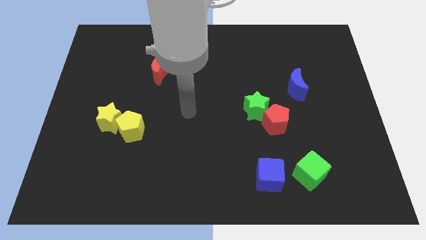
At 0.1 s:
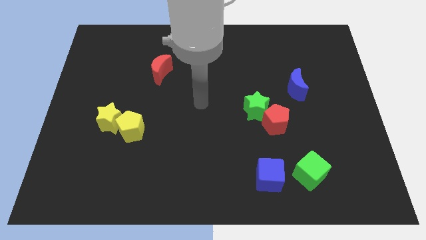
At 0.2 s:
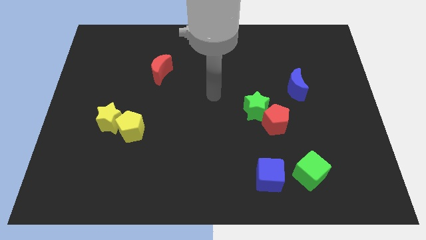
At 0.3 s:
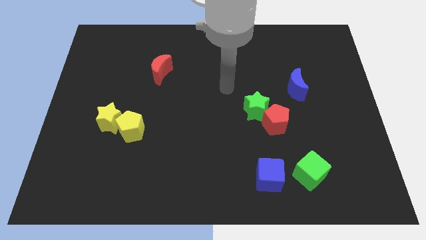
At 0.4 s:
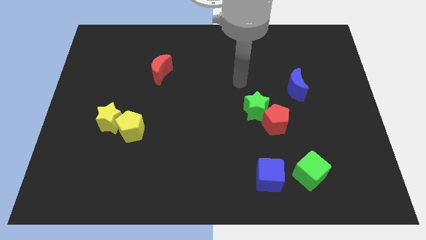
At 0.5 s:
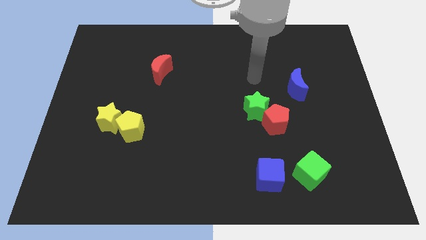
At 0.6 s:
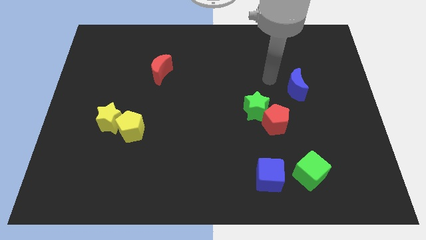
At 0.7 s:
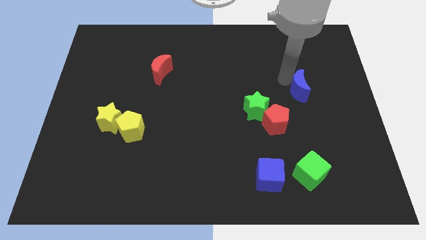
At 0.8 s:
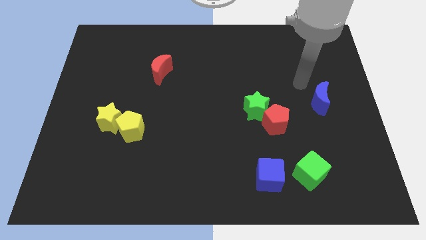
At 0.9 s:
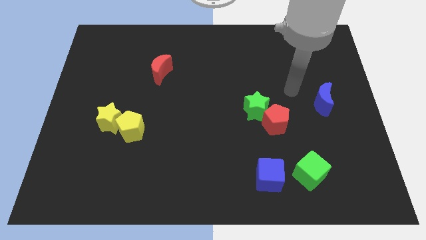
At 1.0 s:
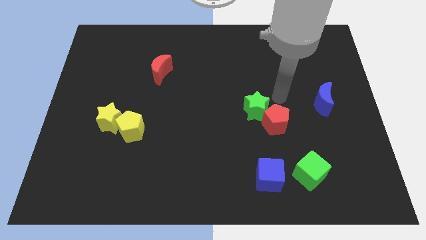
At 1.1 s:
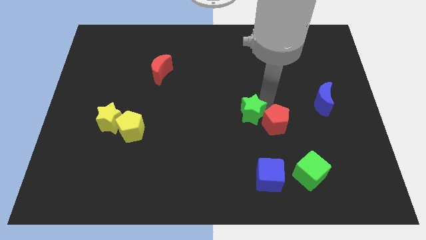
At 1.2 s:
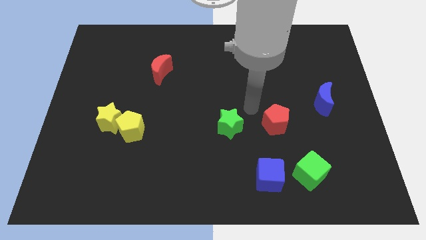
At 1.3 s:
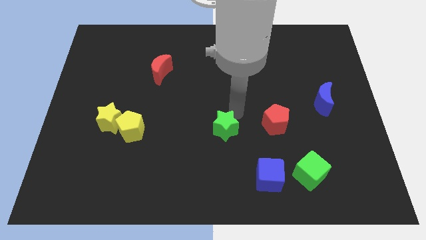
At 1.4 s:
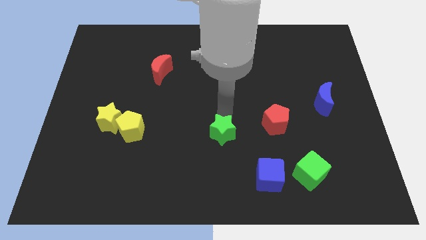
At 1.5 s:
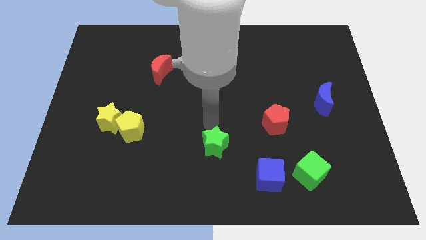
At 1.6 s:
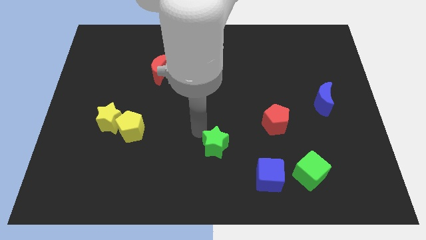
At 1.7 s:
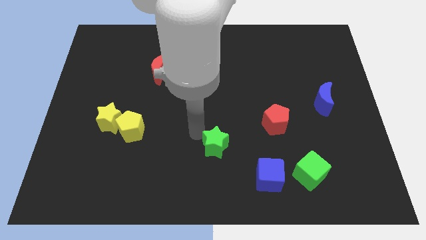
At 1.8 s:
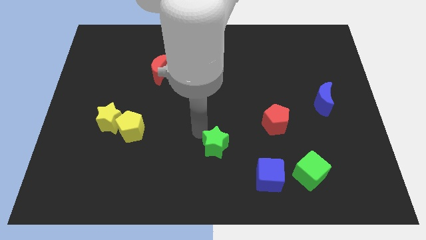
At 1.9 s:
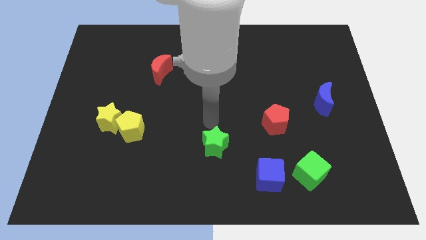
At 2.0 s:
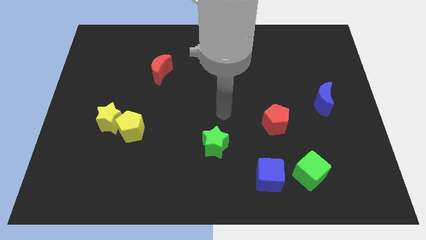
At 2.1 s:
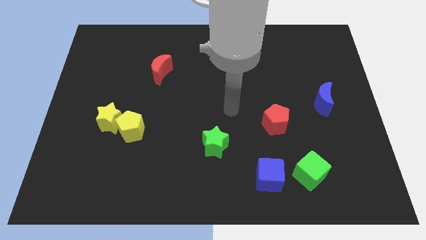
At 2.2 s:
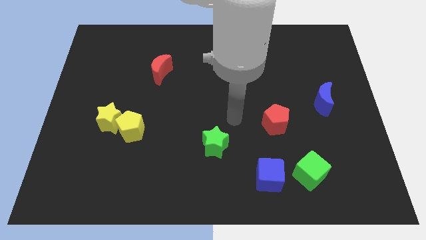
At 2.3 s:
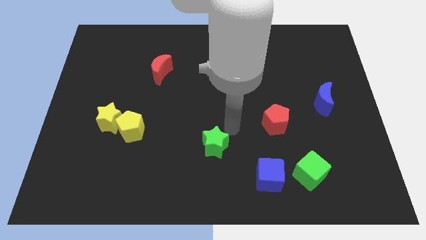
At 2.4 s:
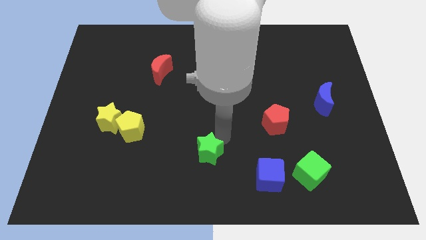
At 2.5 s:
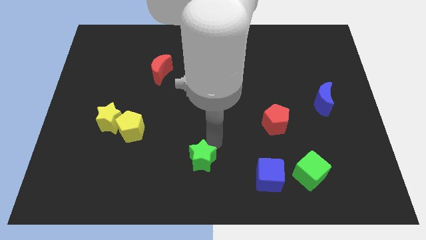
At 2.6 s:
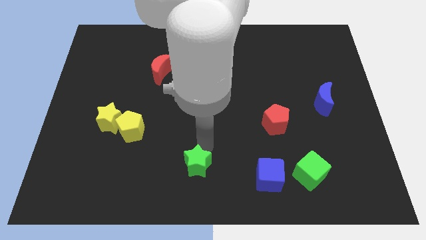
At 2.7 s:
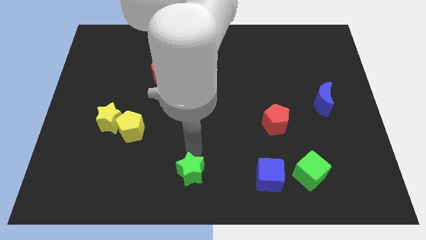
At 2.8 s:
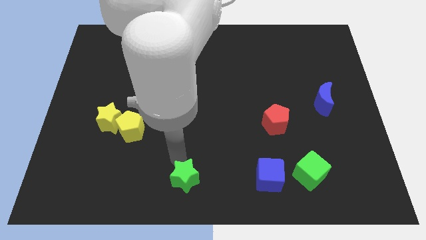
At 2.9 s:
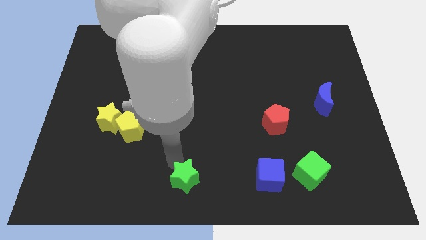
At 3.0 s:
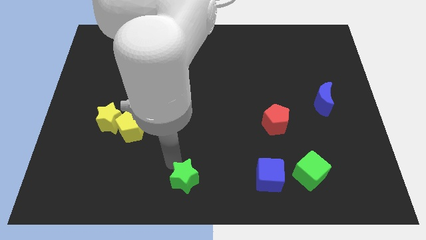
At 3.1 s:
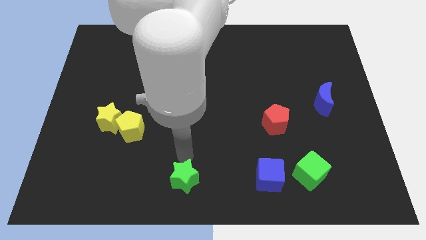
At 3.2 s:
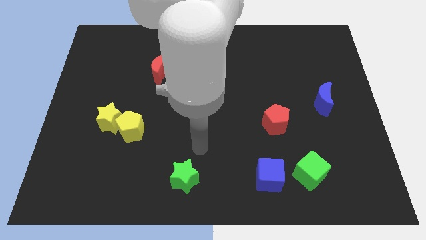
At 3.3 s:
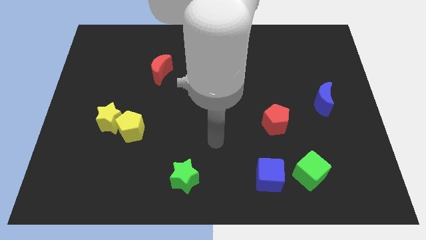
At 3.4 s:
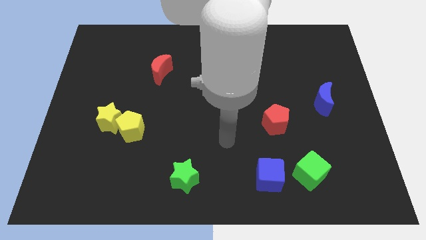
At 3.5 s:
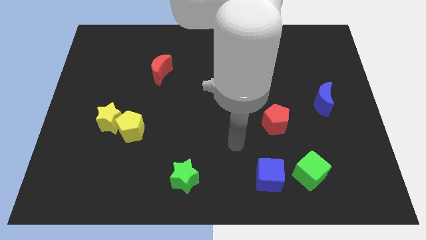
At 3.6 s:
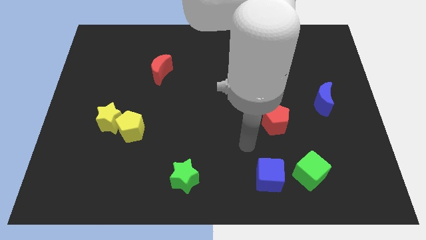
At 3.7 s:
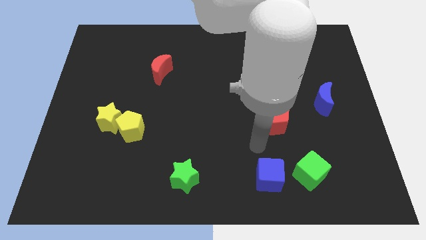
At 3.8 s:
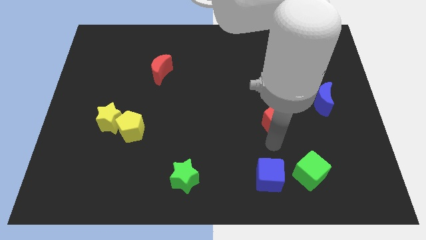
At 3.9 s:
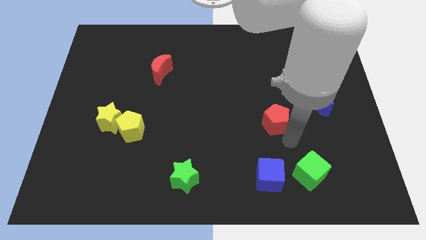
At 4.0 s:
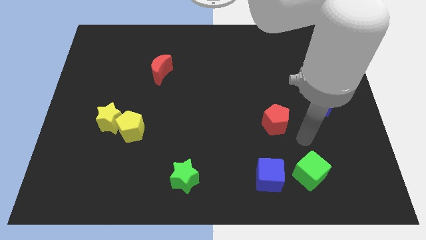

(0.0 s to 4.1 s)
move the green star near to the bottom center

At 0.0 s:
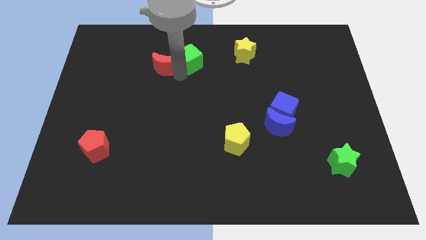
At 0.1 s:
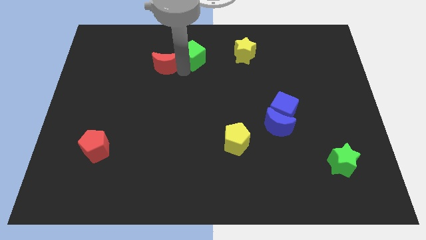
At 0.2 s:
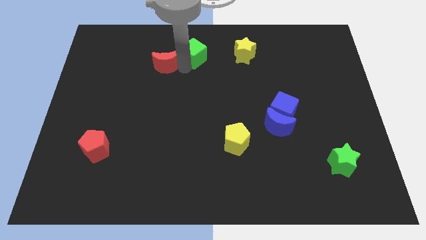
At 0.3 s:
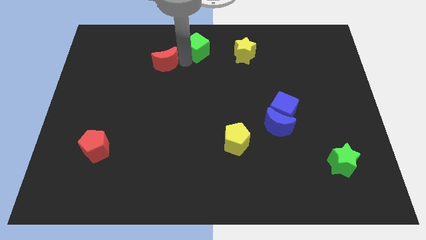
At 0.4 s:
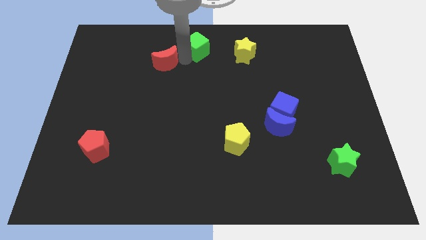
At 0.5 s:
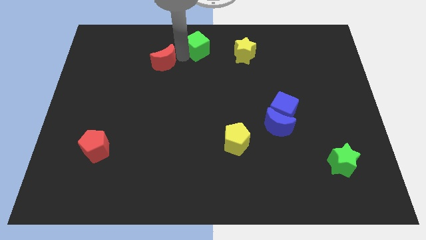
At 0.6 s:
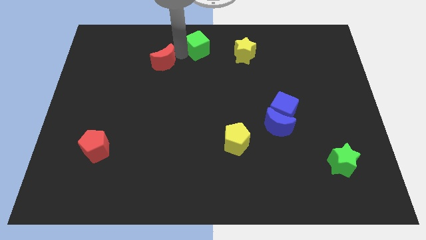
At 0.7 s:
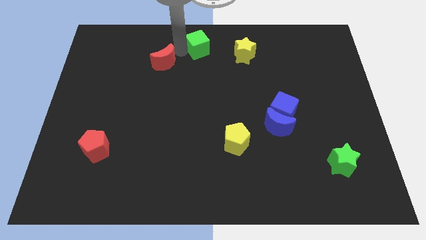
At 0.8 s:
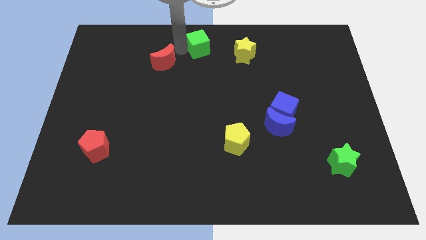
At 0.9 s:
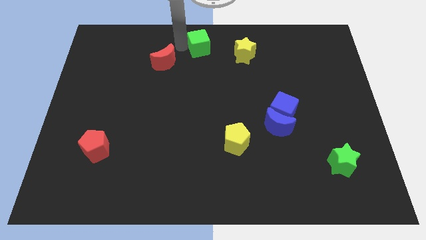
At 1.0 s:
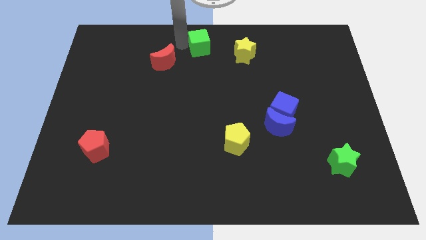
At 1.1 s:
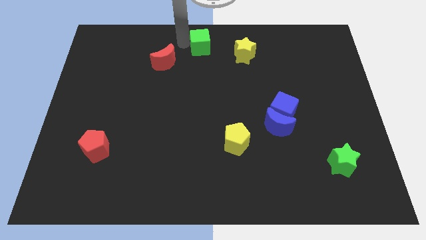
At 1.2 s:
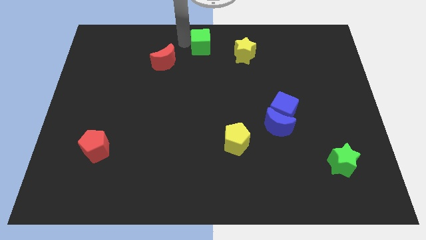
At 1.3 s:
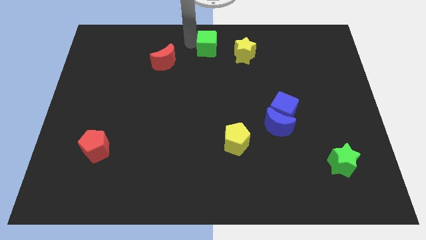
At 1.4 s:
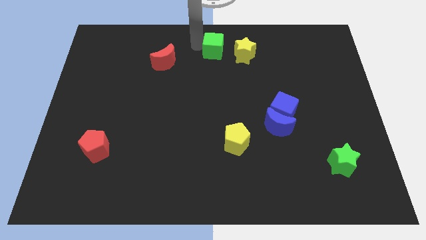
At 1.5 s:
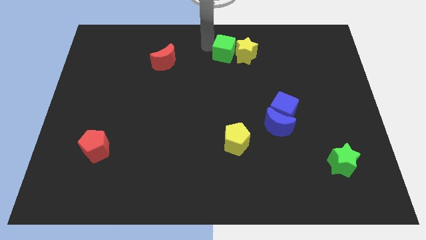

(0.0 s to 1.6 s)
move the green cube into the yellow star

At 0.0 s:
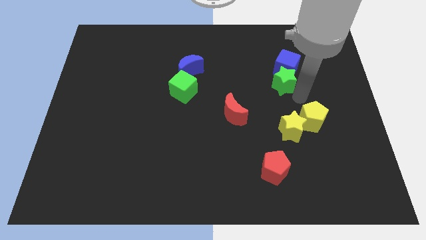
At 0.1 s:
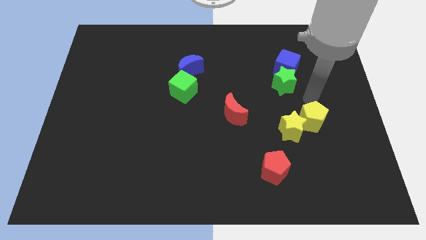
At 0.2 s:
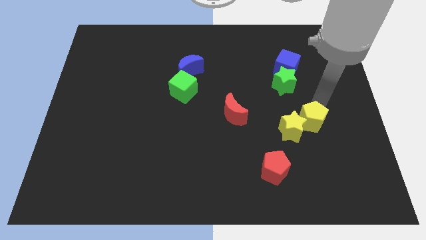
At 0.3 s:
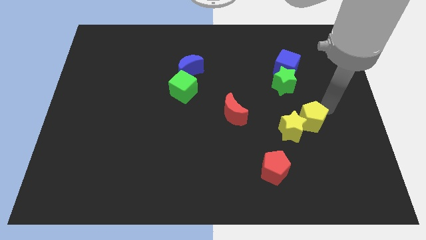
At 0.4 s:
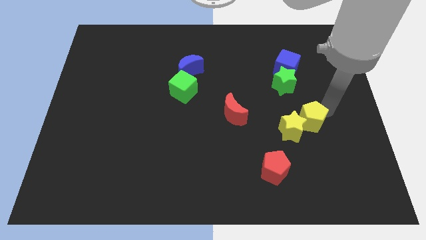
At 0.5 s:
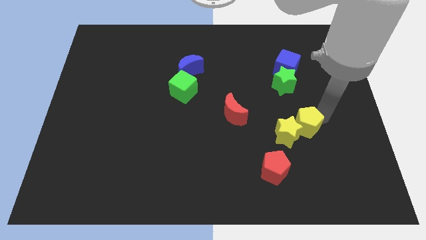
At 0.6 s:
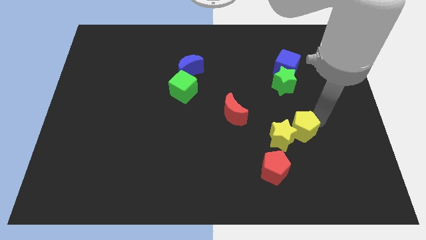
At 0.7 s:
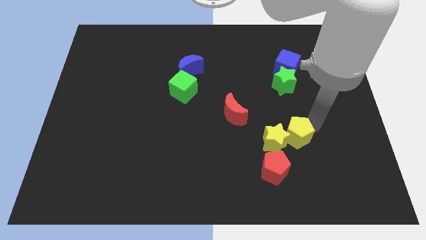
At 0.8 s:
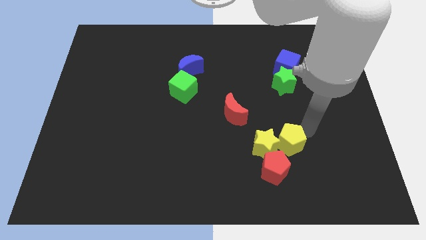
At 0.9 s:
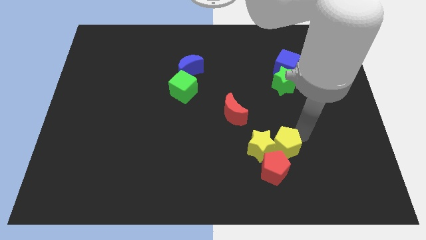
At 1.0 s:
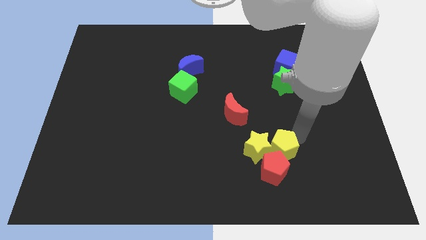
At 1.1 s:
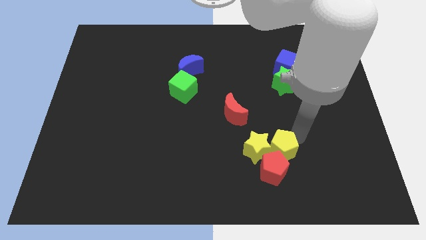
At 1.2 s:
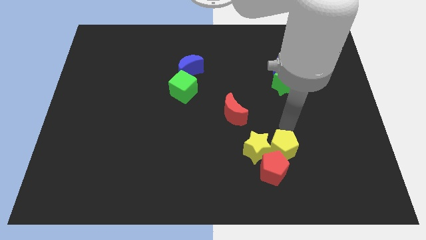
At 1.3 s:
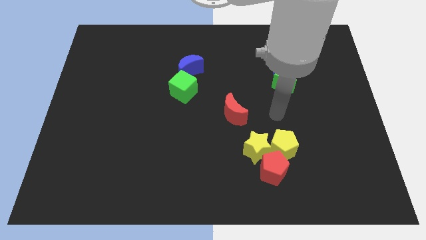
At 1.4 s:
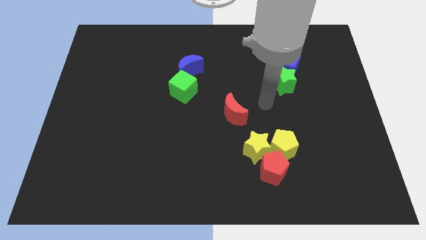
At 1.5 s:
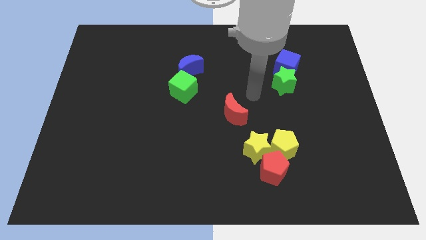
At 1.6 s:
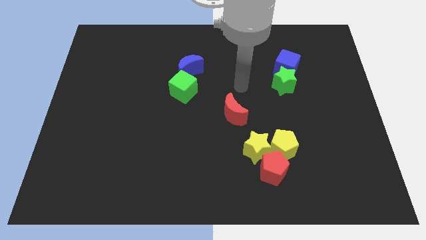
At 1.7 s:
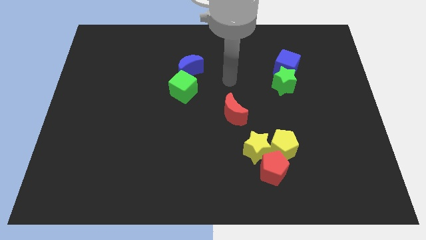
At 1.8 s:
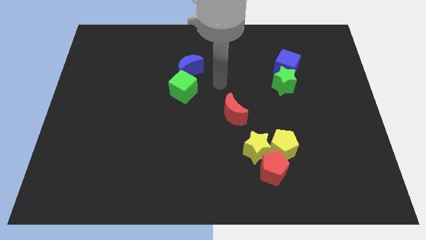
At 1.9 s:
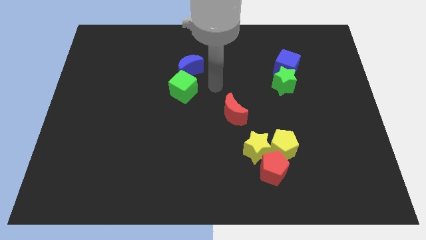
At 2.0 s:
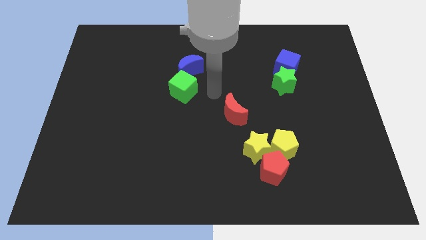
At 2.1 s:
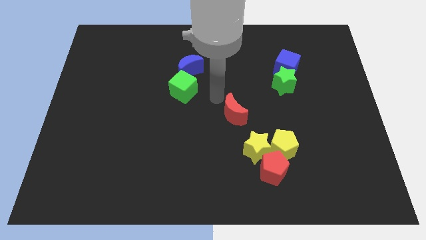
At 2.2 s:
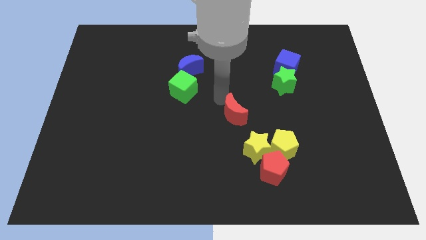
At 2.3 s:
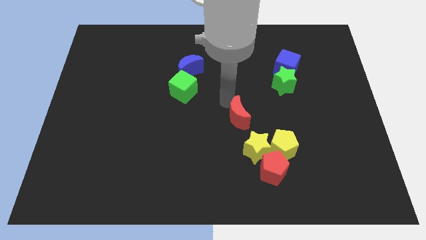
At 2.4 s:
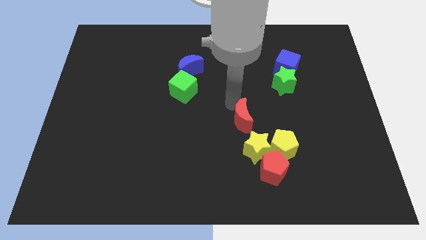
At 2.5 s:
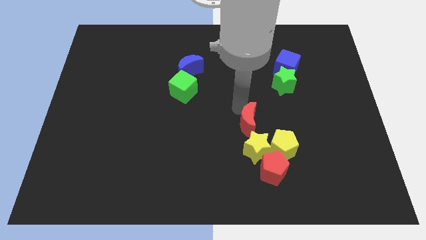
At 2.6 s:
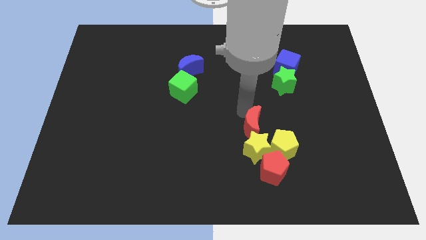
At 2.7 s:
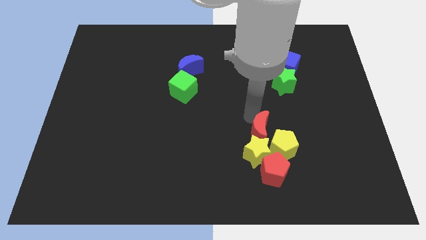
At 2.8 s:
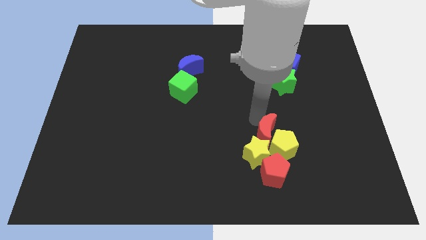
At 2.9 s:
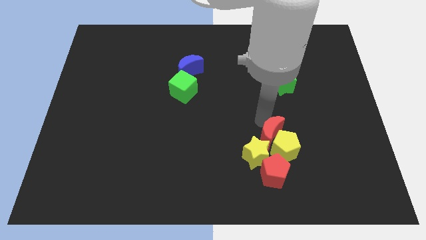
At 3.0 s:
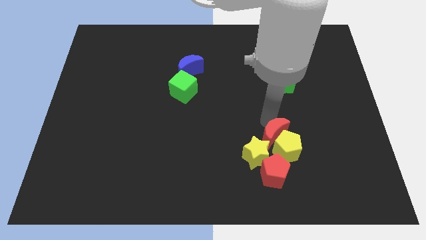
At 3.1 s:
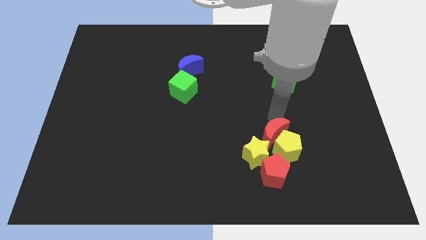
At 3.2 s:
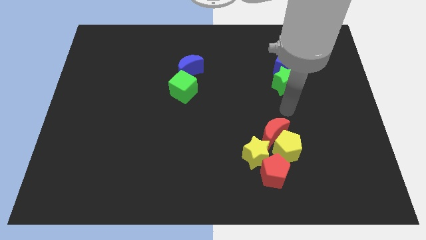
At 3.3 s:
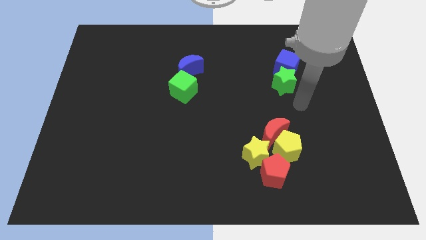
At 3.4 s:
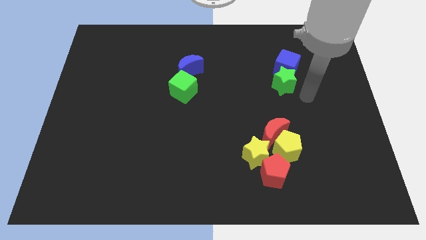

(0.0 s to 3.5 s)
make a group of yellow and red blocks
